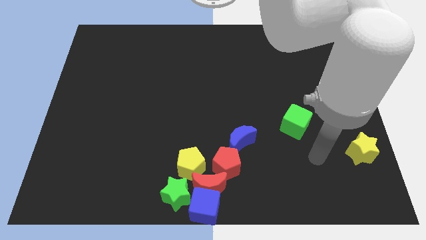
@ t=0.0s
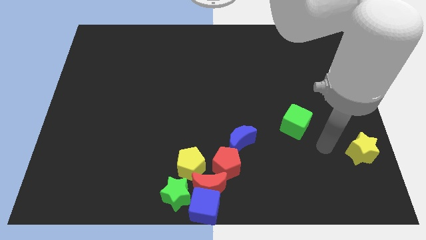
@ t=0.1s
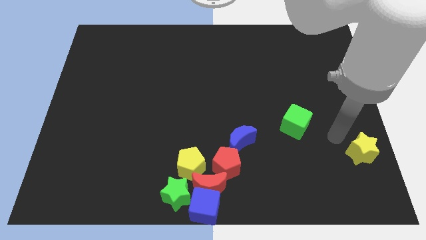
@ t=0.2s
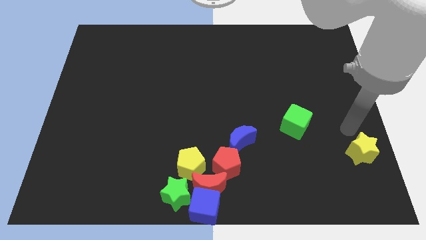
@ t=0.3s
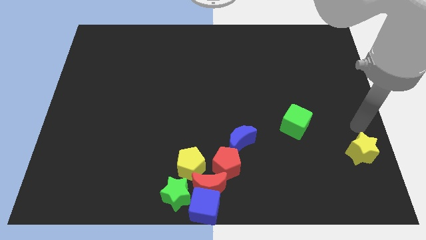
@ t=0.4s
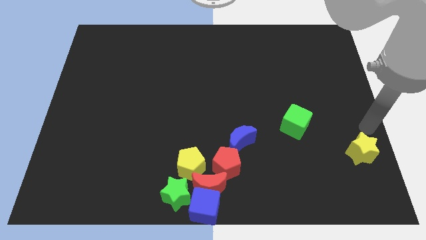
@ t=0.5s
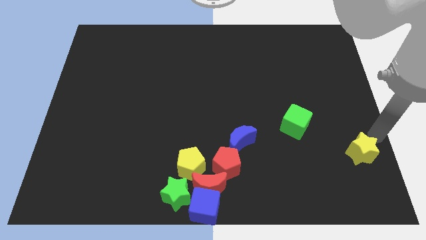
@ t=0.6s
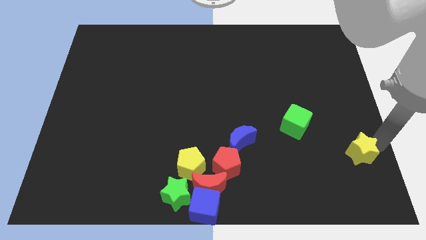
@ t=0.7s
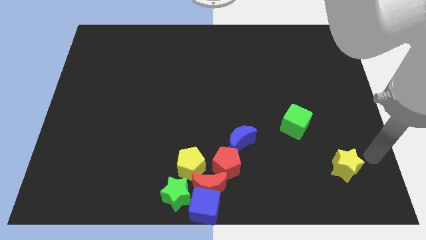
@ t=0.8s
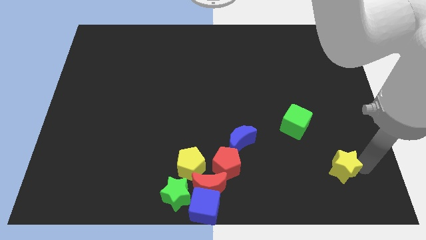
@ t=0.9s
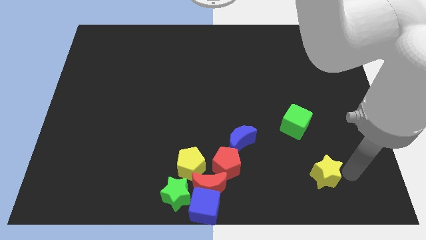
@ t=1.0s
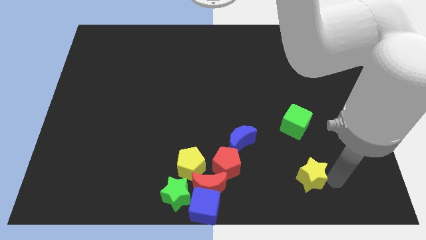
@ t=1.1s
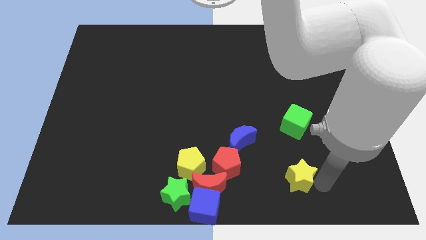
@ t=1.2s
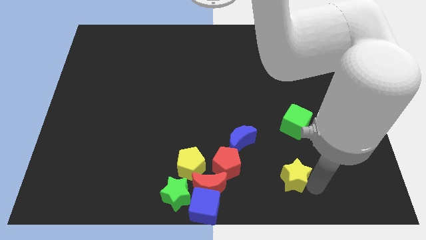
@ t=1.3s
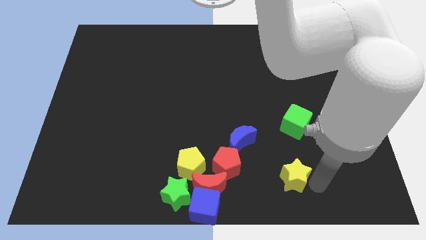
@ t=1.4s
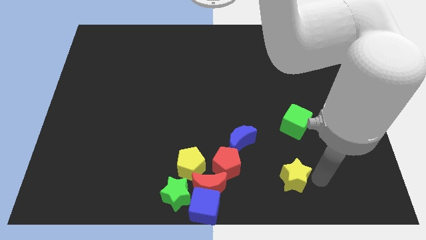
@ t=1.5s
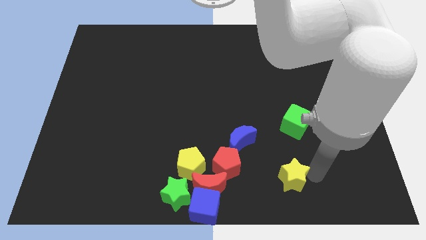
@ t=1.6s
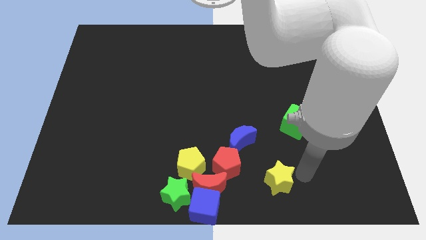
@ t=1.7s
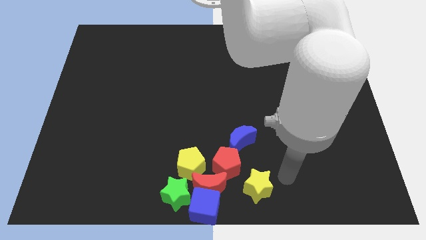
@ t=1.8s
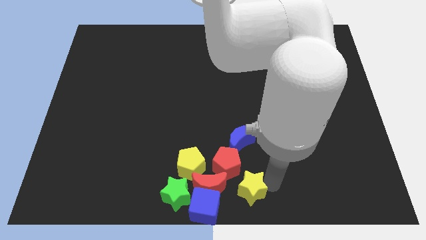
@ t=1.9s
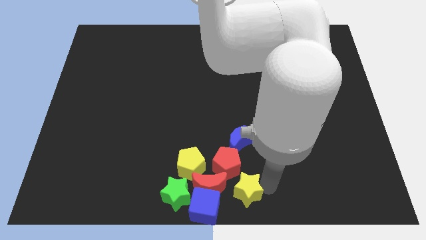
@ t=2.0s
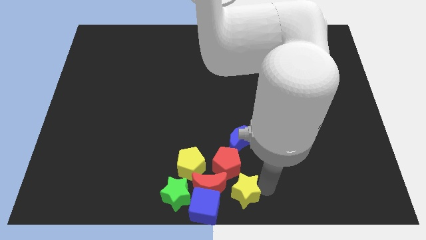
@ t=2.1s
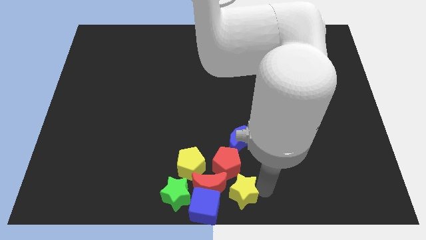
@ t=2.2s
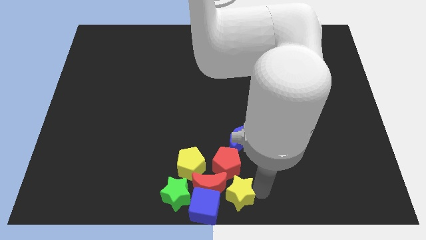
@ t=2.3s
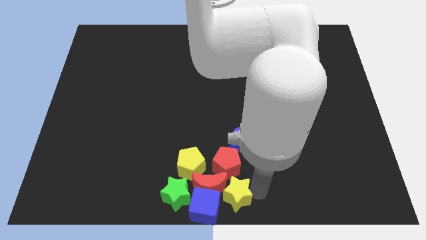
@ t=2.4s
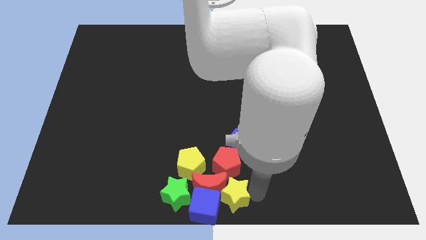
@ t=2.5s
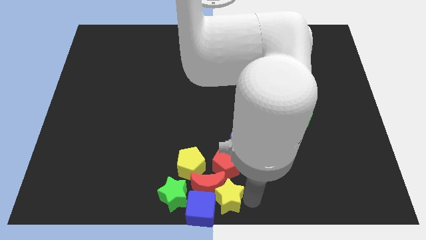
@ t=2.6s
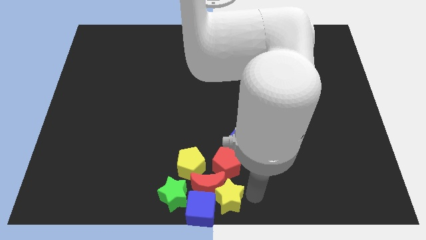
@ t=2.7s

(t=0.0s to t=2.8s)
push yellow star into red moon

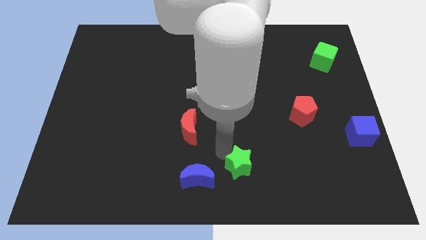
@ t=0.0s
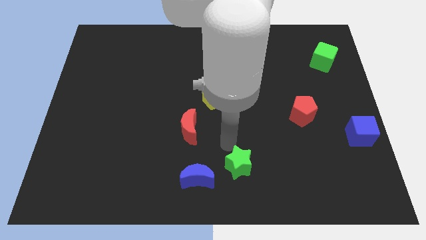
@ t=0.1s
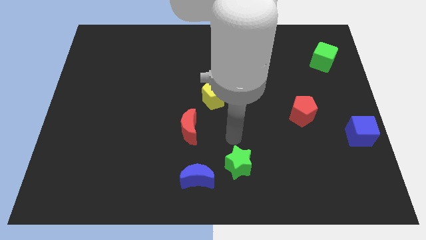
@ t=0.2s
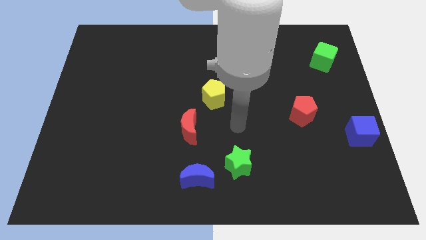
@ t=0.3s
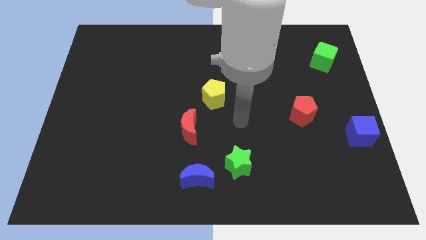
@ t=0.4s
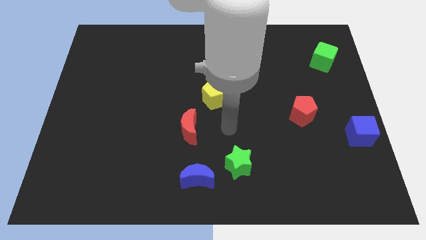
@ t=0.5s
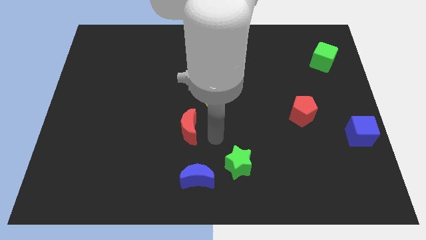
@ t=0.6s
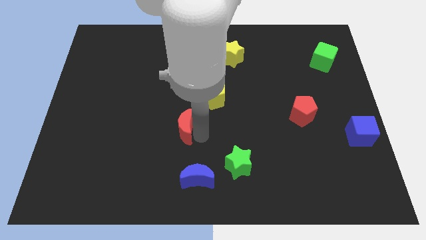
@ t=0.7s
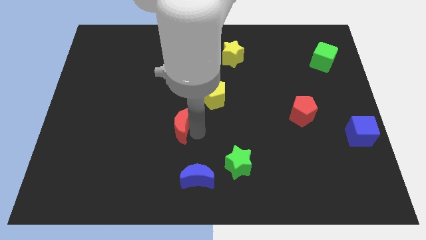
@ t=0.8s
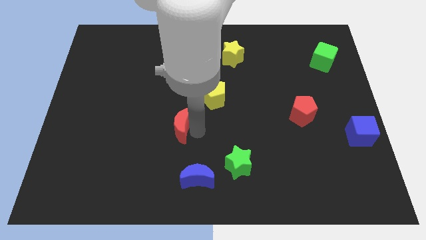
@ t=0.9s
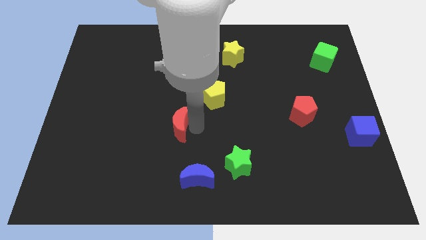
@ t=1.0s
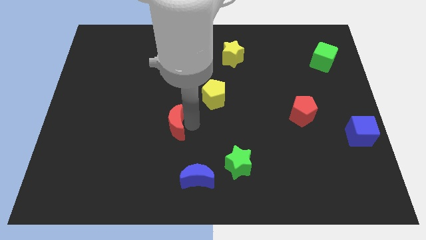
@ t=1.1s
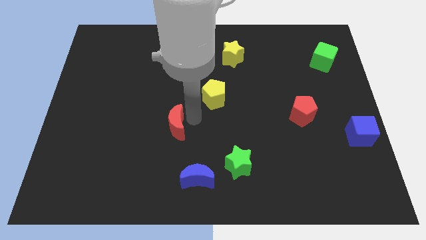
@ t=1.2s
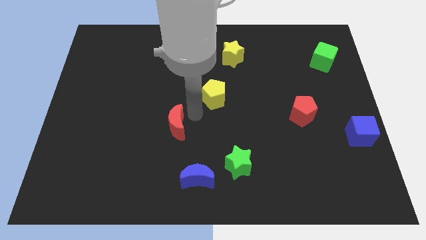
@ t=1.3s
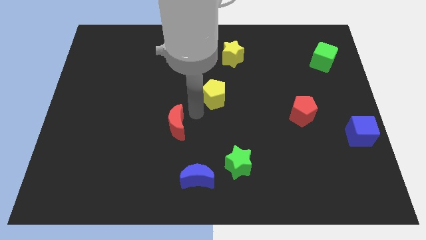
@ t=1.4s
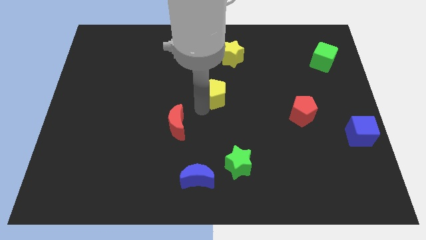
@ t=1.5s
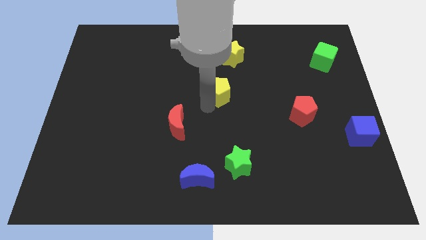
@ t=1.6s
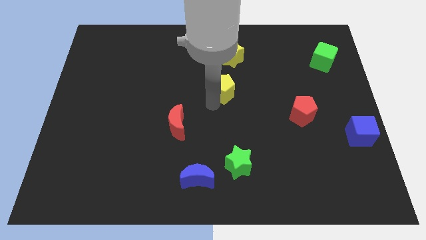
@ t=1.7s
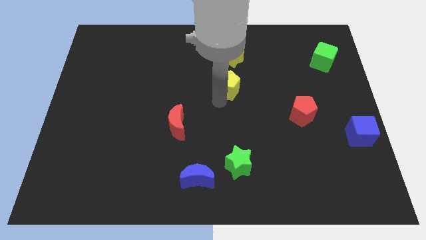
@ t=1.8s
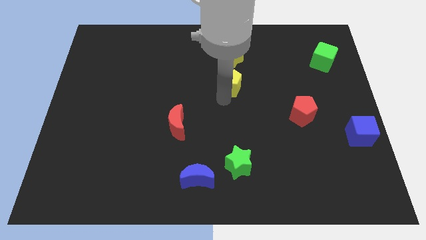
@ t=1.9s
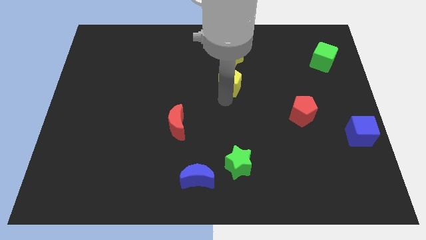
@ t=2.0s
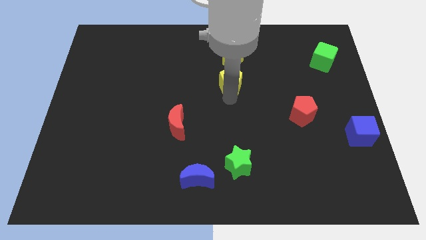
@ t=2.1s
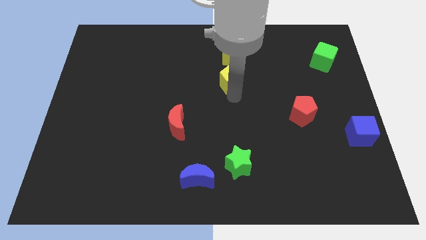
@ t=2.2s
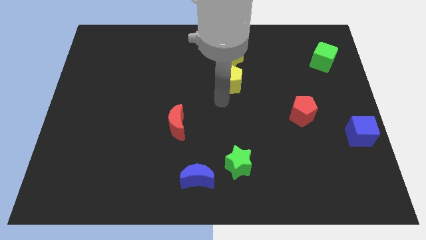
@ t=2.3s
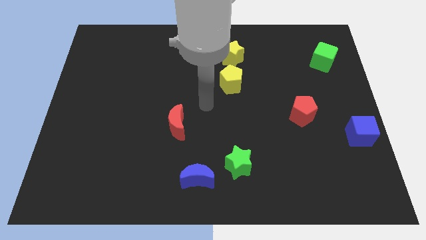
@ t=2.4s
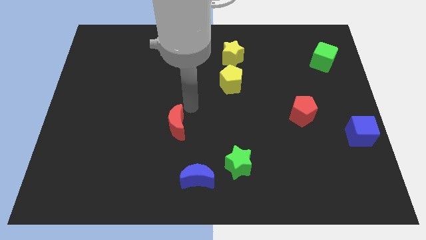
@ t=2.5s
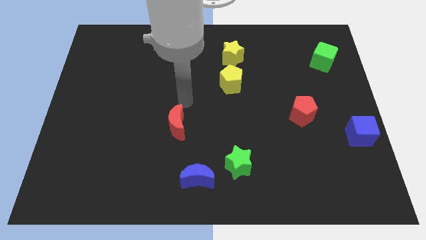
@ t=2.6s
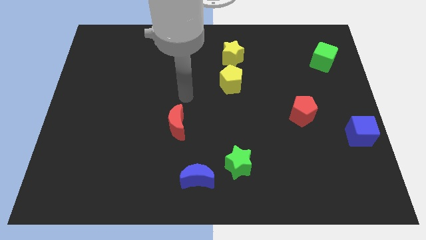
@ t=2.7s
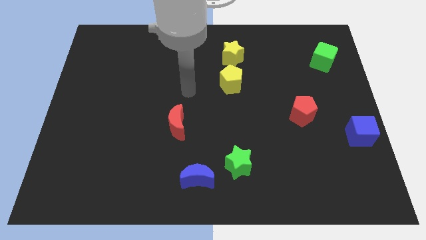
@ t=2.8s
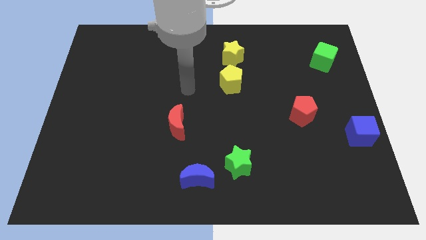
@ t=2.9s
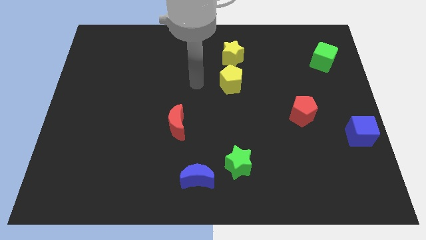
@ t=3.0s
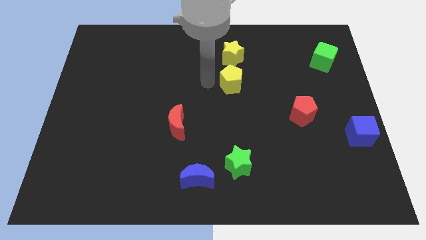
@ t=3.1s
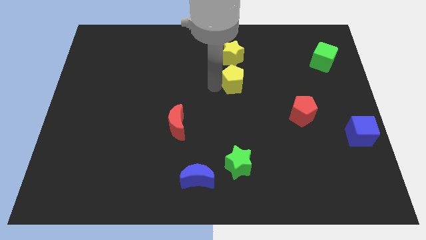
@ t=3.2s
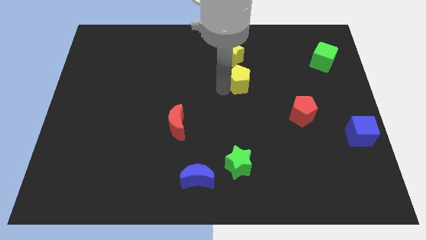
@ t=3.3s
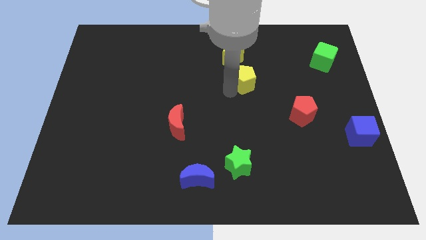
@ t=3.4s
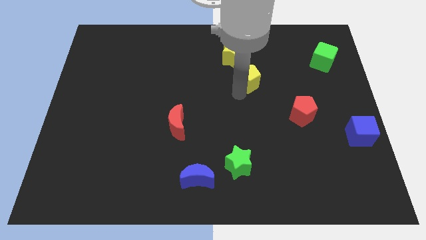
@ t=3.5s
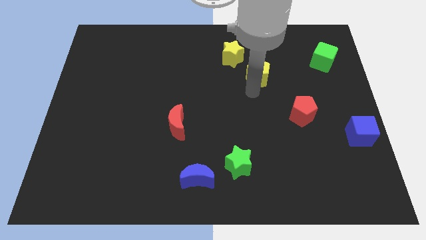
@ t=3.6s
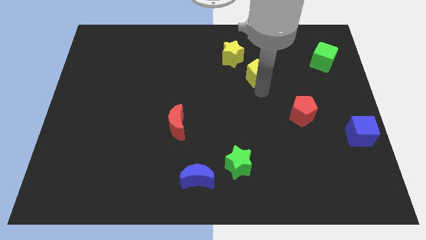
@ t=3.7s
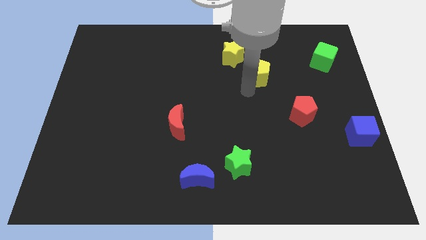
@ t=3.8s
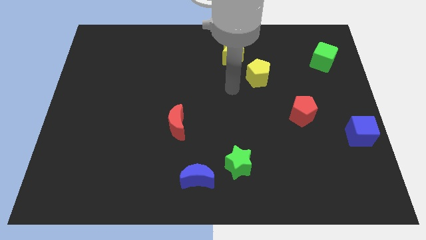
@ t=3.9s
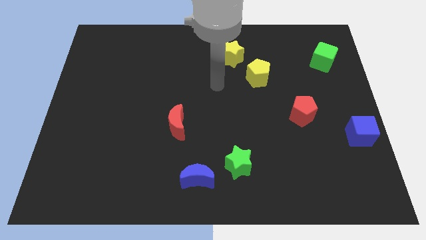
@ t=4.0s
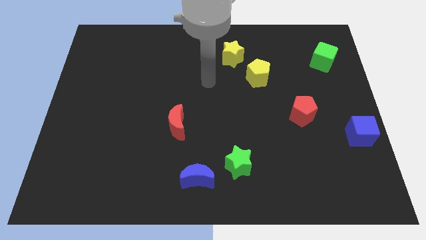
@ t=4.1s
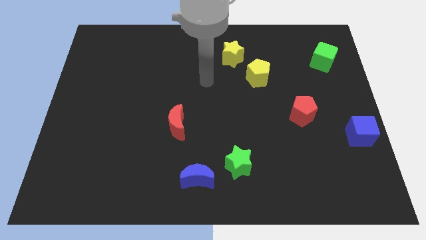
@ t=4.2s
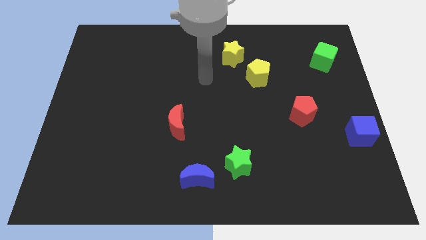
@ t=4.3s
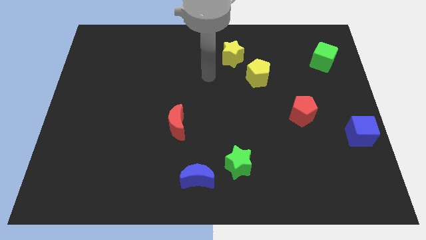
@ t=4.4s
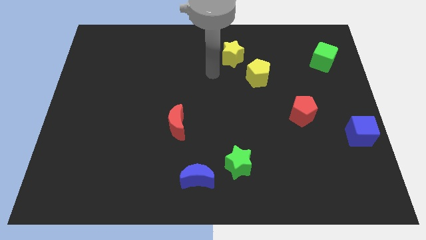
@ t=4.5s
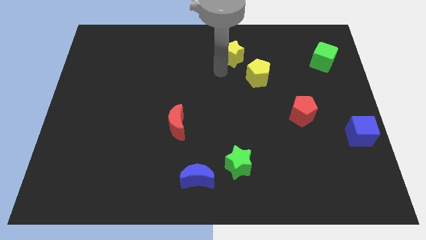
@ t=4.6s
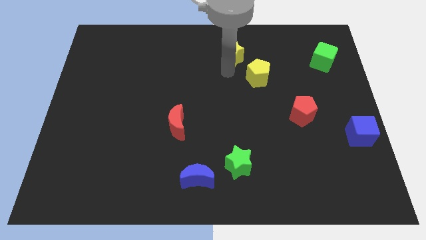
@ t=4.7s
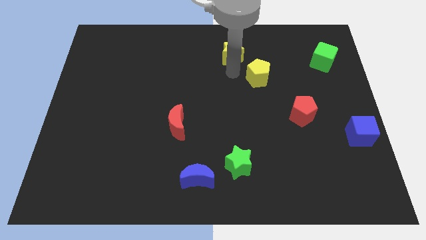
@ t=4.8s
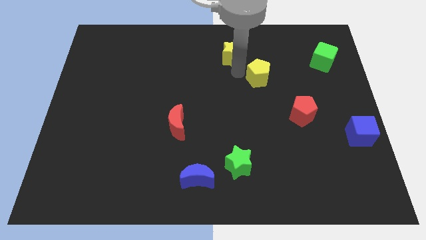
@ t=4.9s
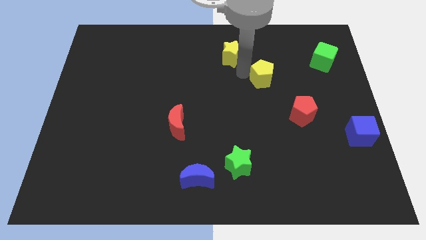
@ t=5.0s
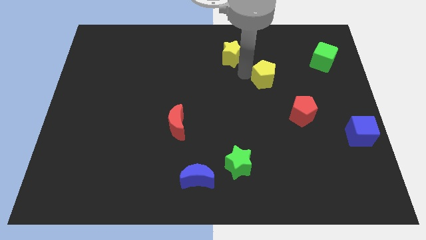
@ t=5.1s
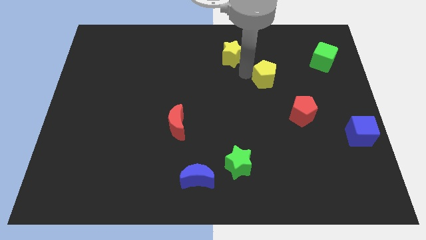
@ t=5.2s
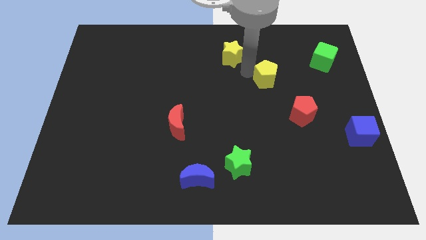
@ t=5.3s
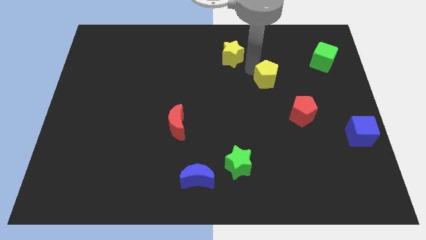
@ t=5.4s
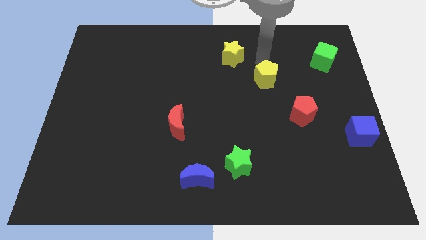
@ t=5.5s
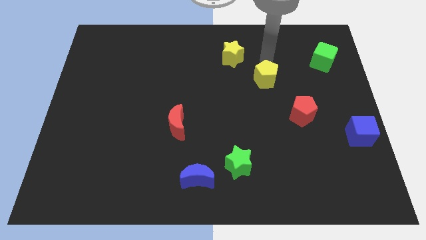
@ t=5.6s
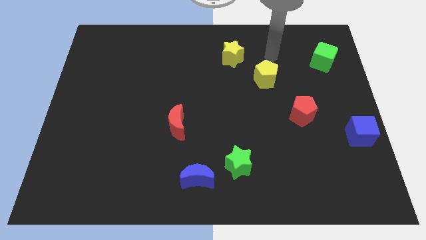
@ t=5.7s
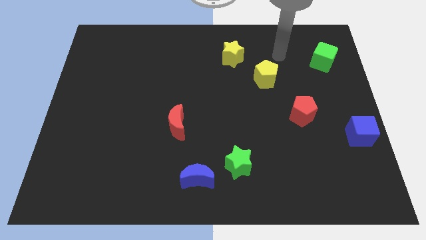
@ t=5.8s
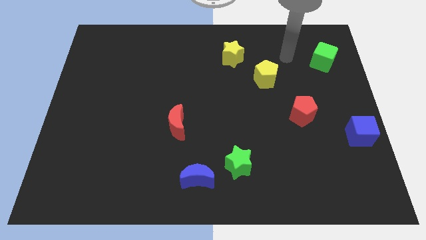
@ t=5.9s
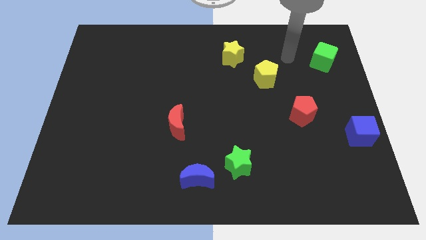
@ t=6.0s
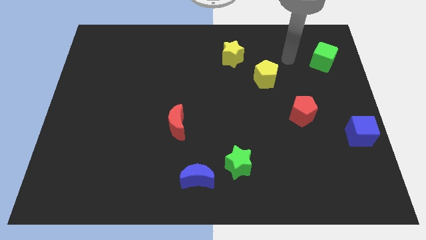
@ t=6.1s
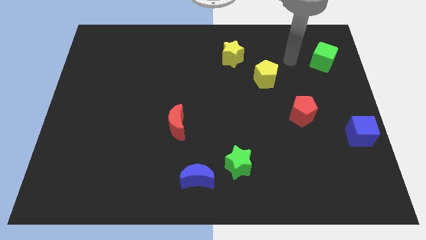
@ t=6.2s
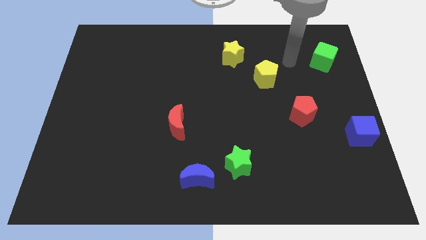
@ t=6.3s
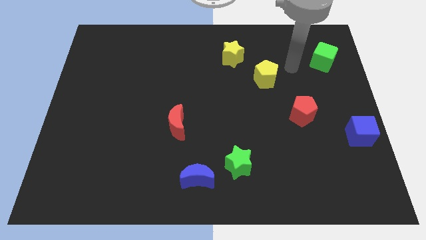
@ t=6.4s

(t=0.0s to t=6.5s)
place the yellow pentagon between the red pentagon and yellow star
